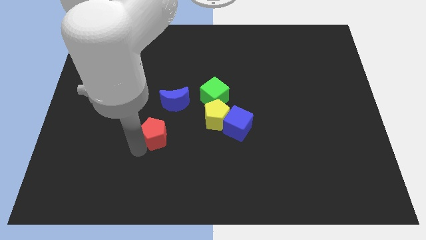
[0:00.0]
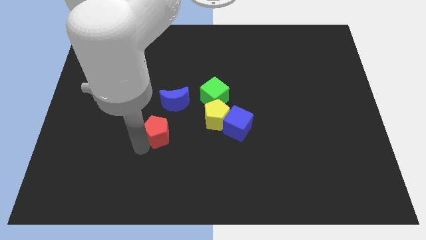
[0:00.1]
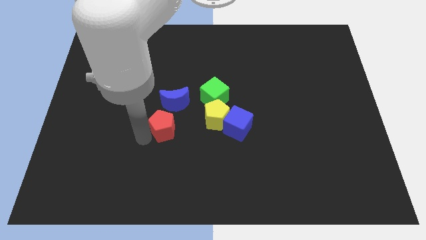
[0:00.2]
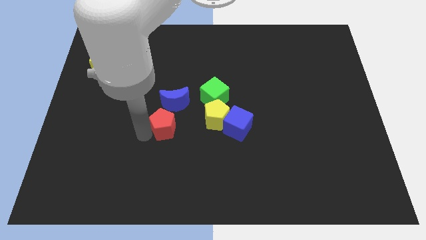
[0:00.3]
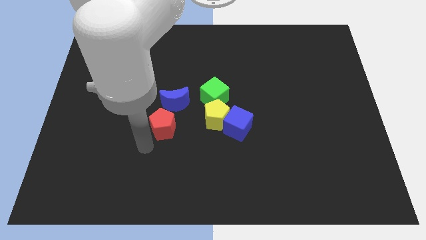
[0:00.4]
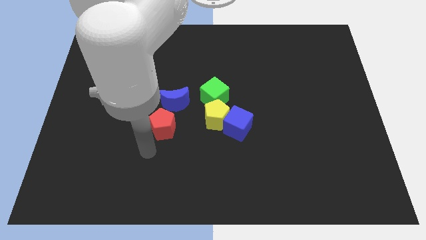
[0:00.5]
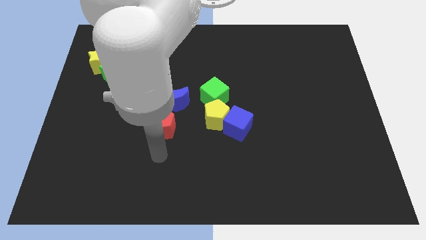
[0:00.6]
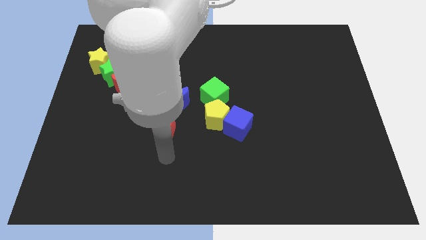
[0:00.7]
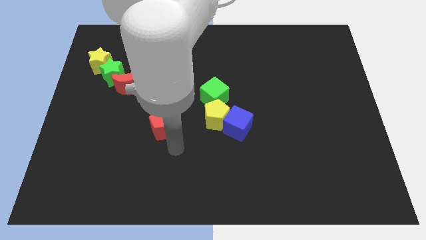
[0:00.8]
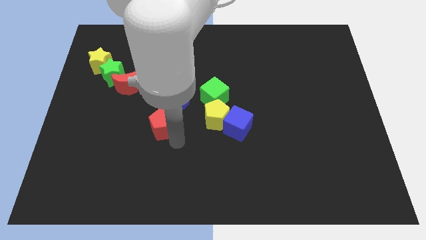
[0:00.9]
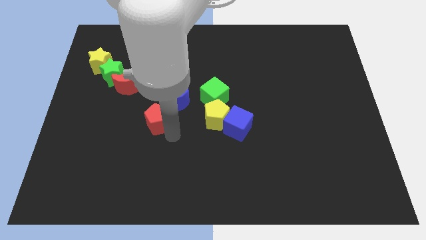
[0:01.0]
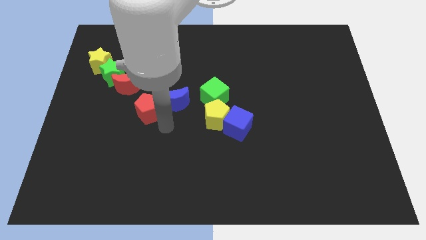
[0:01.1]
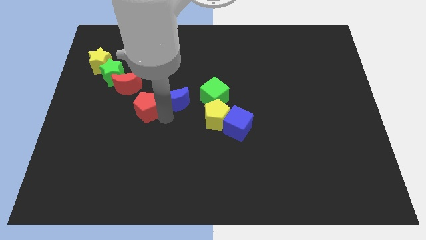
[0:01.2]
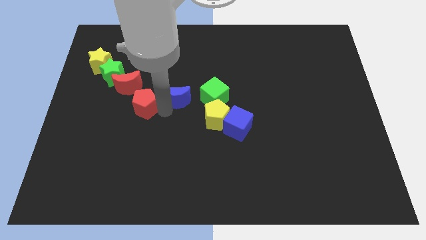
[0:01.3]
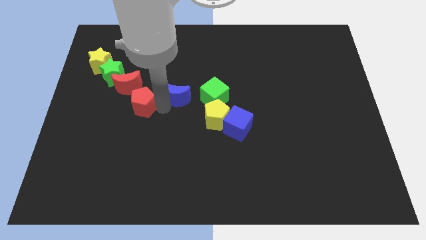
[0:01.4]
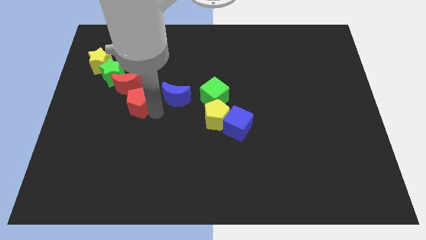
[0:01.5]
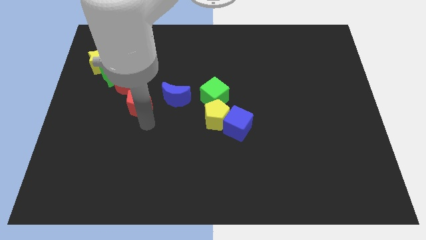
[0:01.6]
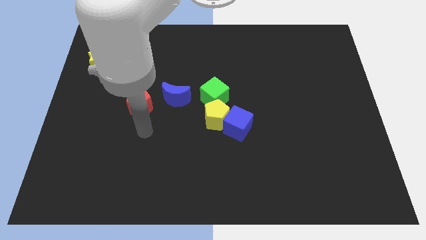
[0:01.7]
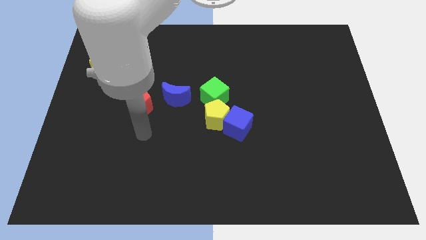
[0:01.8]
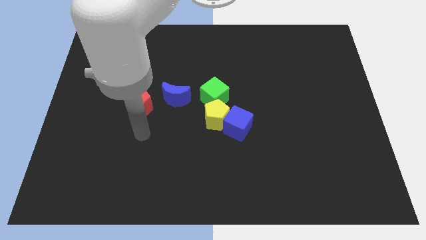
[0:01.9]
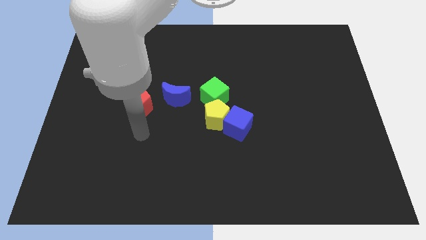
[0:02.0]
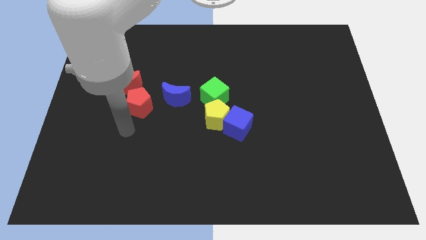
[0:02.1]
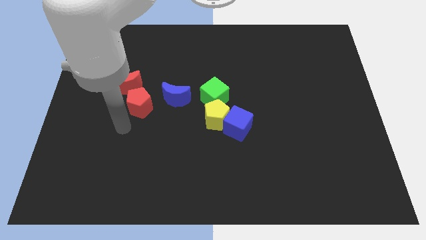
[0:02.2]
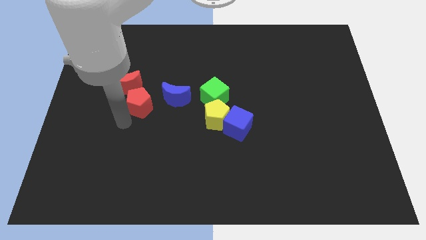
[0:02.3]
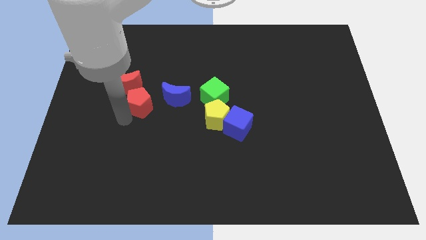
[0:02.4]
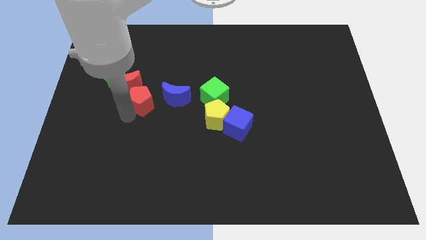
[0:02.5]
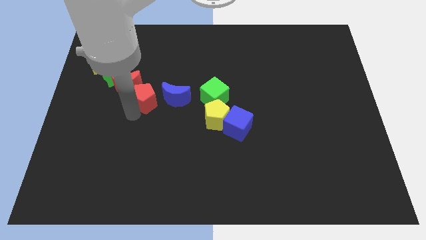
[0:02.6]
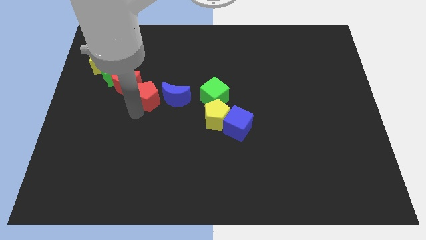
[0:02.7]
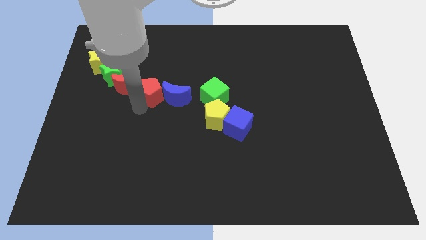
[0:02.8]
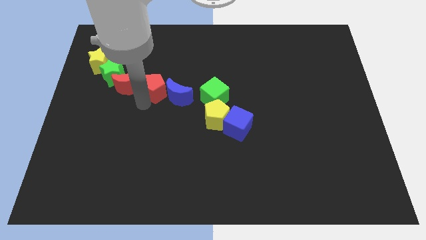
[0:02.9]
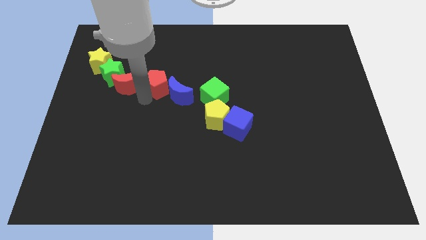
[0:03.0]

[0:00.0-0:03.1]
add red pentagon close to red moon

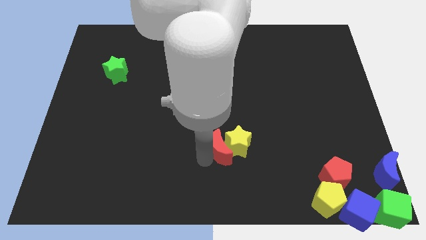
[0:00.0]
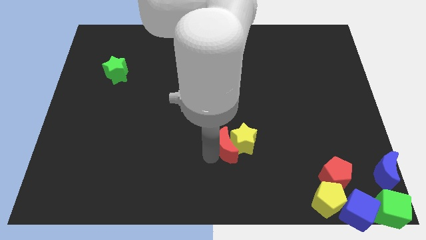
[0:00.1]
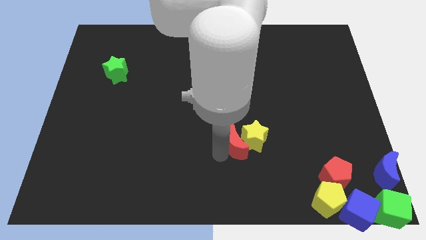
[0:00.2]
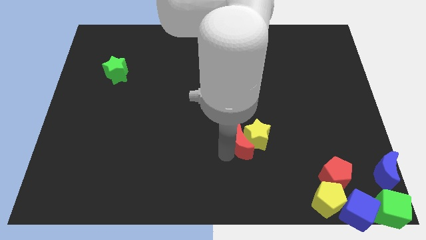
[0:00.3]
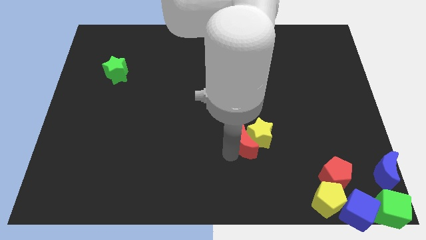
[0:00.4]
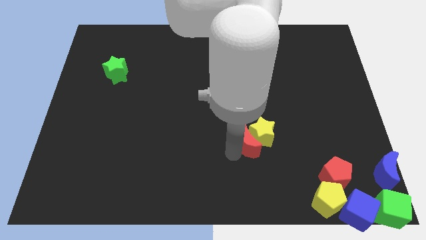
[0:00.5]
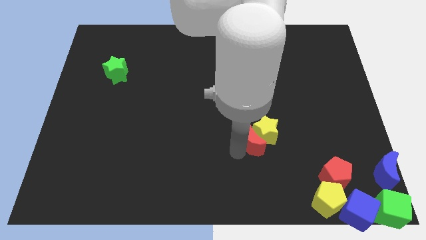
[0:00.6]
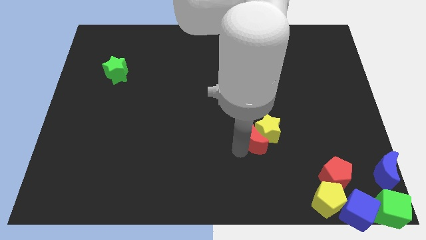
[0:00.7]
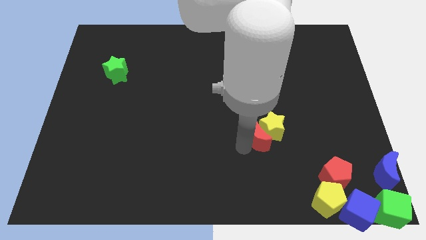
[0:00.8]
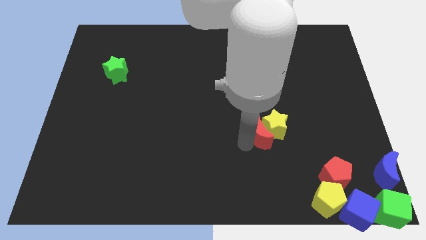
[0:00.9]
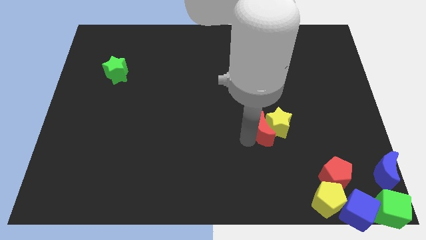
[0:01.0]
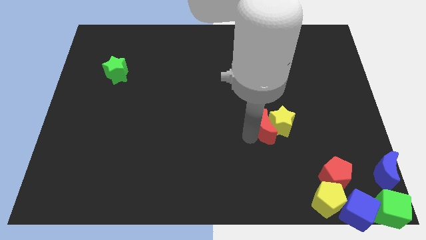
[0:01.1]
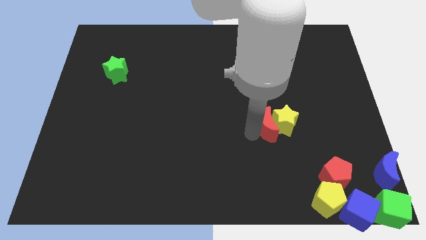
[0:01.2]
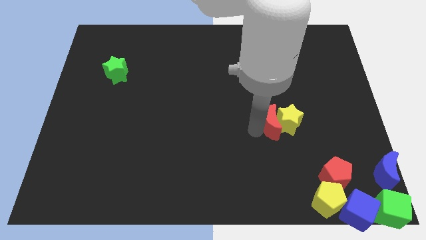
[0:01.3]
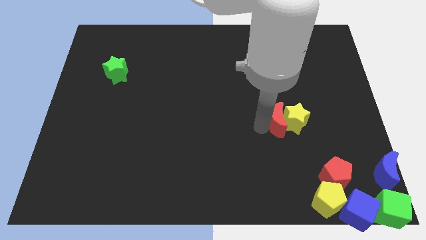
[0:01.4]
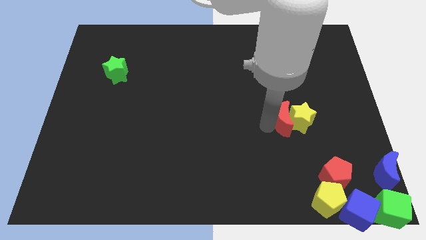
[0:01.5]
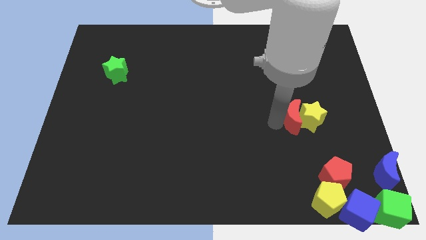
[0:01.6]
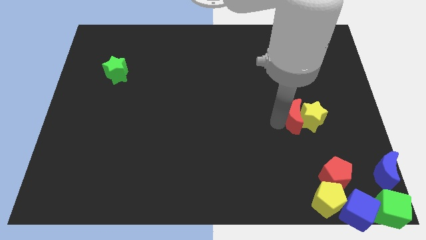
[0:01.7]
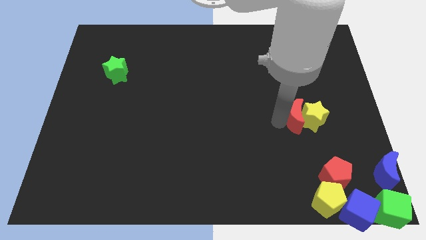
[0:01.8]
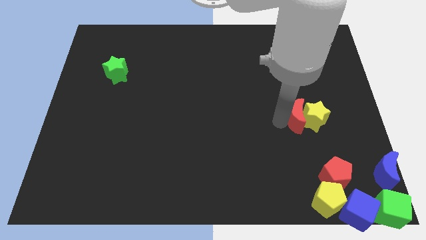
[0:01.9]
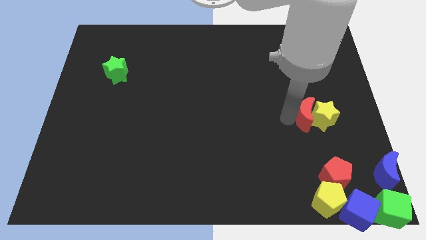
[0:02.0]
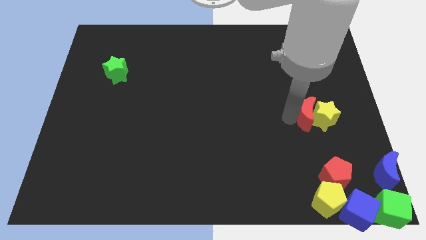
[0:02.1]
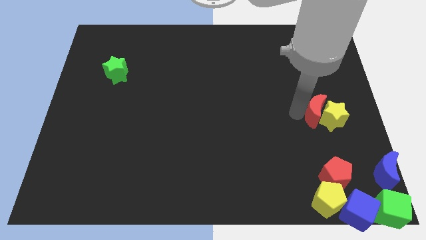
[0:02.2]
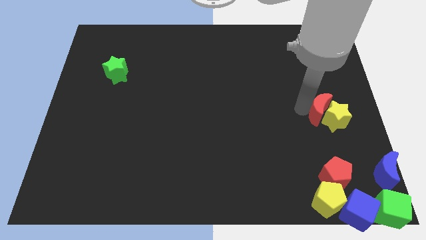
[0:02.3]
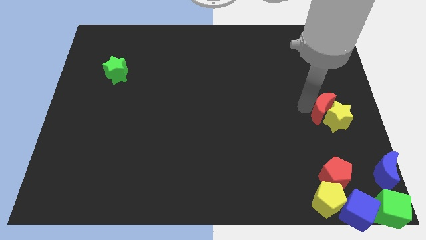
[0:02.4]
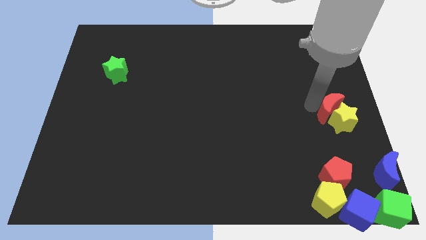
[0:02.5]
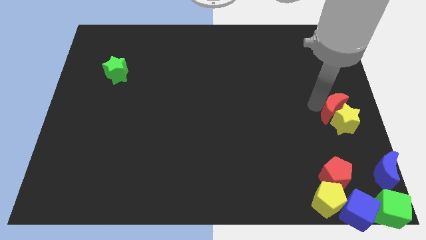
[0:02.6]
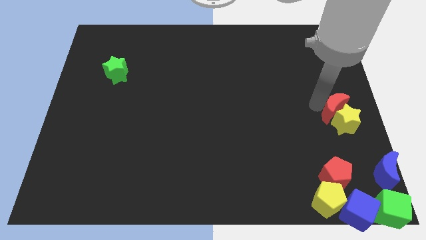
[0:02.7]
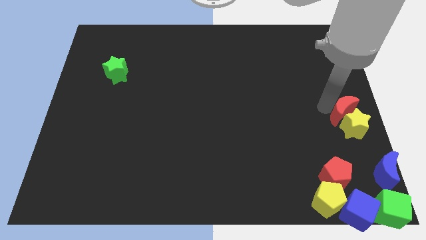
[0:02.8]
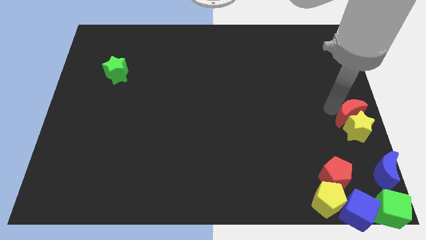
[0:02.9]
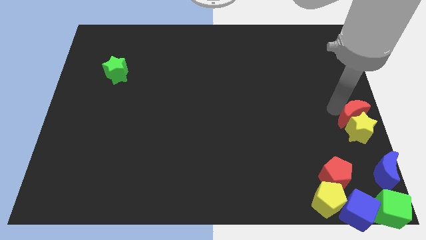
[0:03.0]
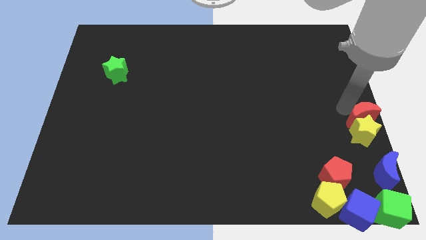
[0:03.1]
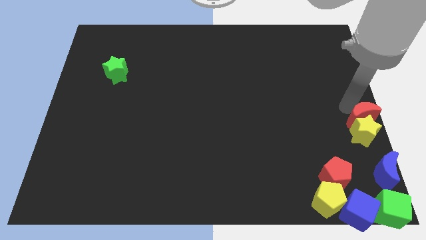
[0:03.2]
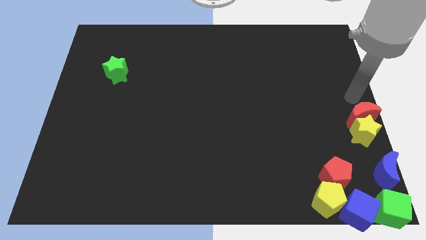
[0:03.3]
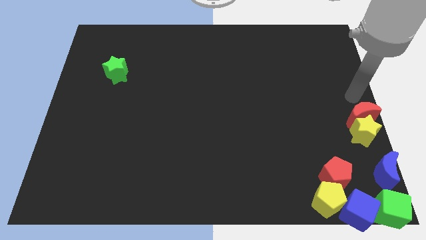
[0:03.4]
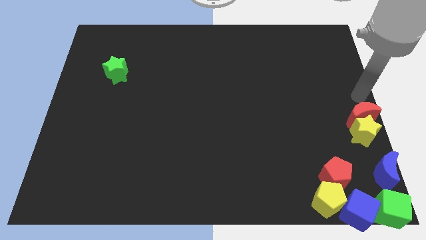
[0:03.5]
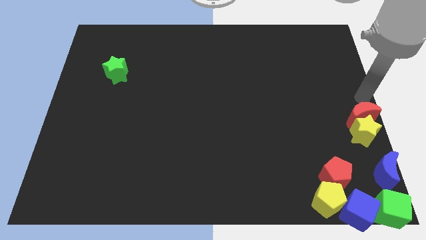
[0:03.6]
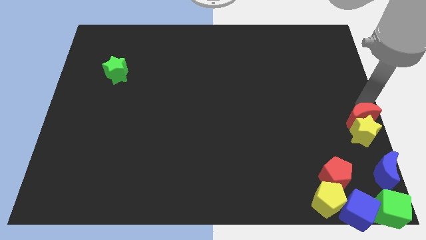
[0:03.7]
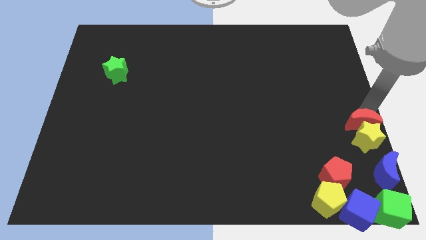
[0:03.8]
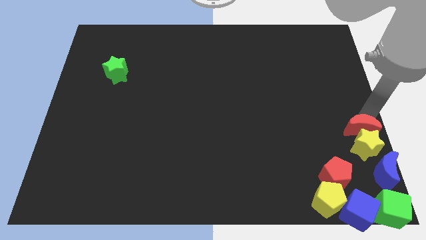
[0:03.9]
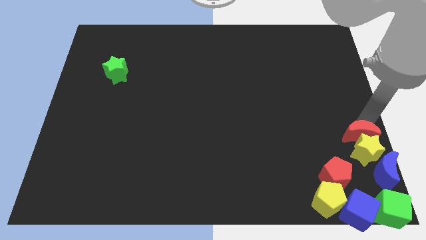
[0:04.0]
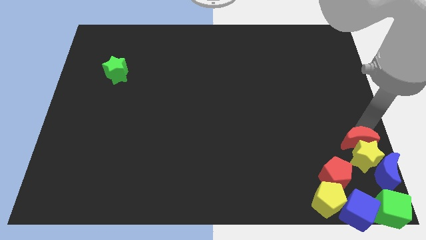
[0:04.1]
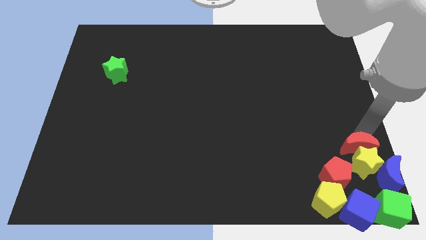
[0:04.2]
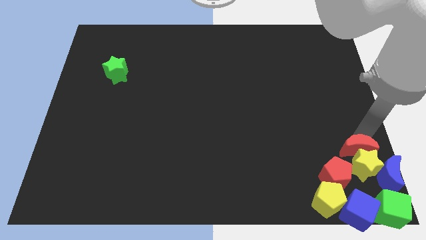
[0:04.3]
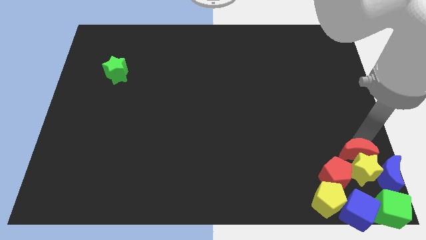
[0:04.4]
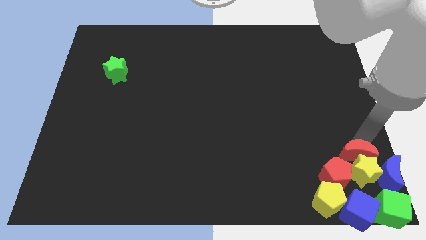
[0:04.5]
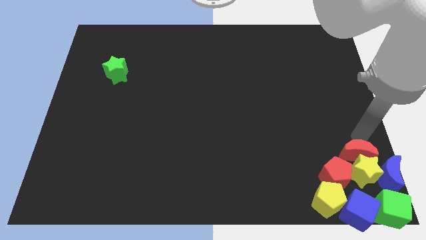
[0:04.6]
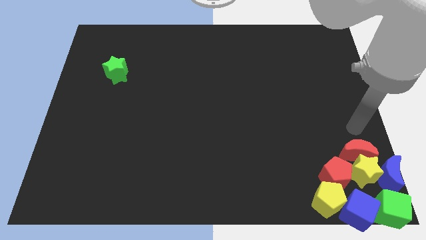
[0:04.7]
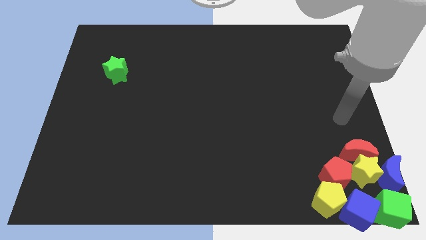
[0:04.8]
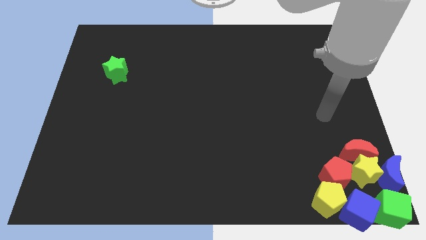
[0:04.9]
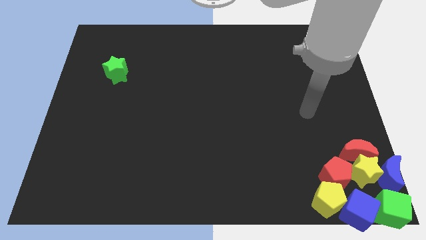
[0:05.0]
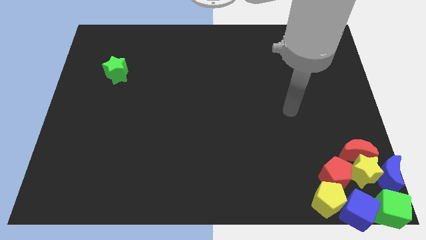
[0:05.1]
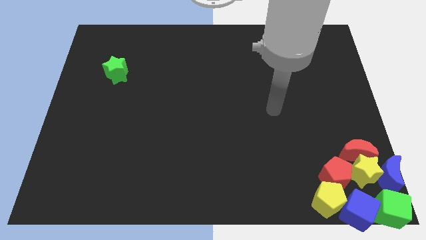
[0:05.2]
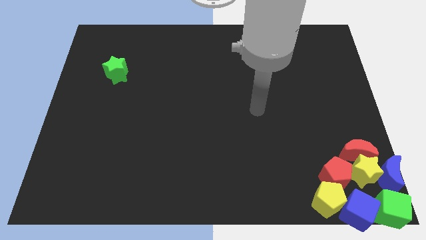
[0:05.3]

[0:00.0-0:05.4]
push the red crescent along with yellow star into the blue crescent

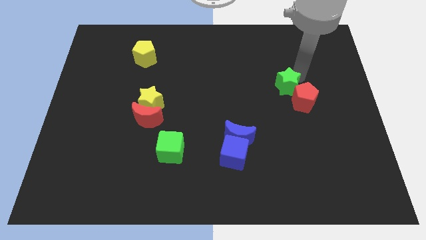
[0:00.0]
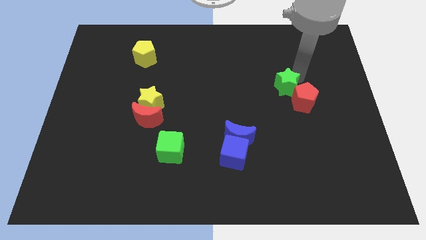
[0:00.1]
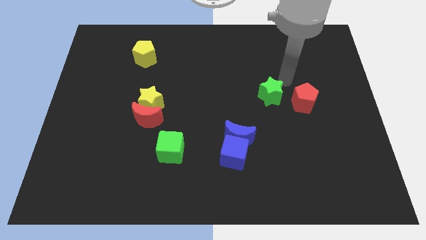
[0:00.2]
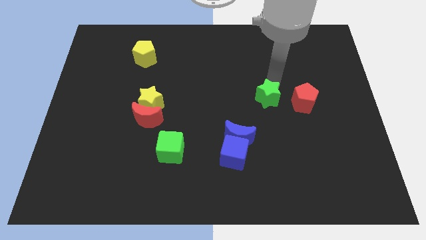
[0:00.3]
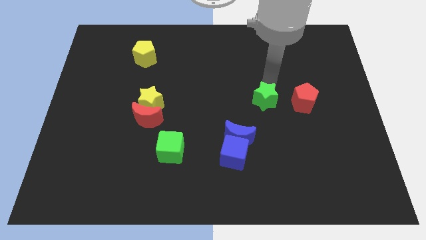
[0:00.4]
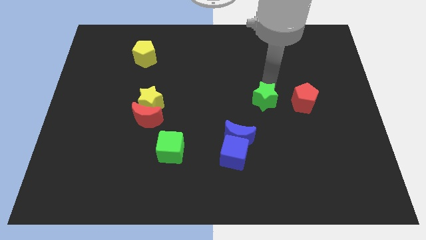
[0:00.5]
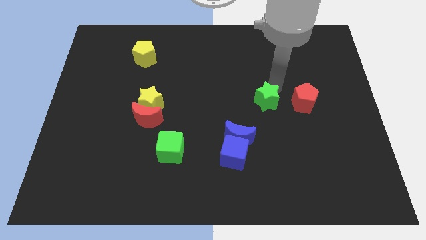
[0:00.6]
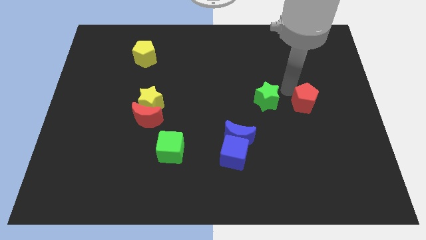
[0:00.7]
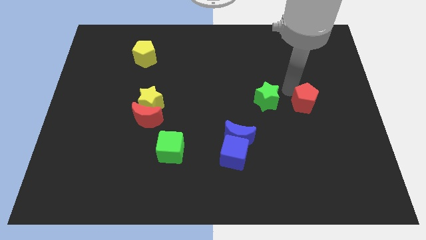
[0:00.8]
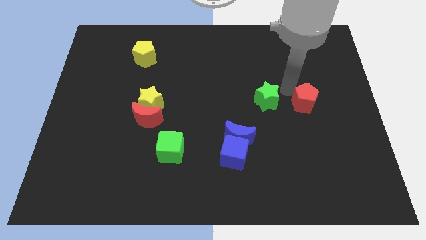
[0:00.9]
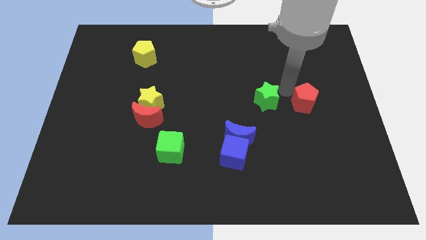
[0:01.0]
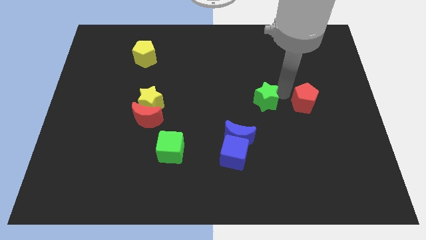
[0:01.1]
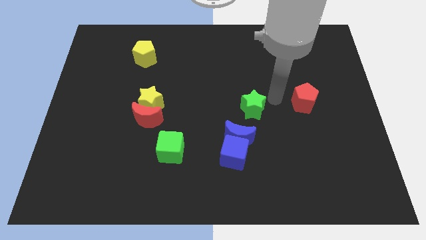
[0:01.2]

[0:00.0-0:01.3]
drag the green star slightly downwards
